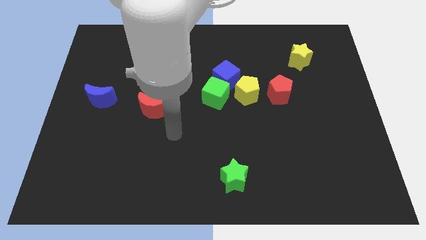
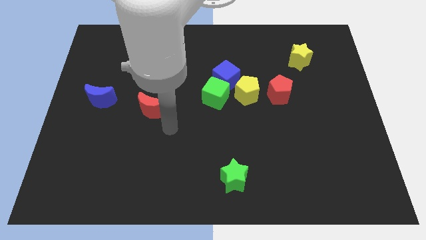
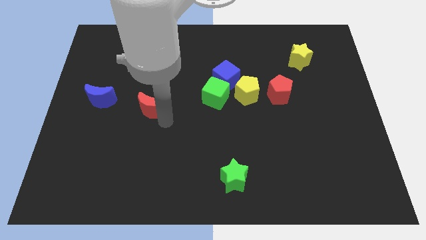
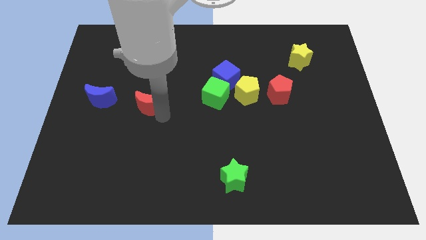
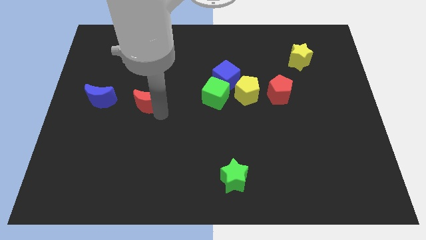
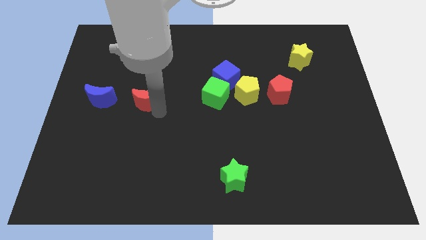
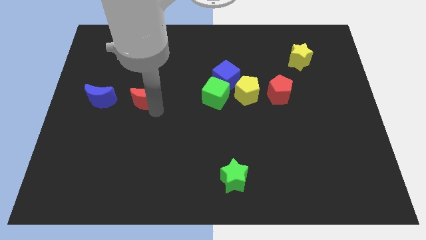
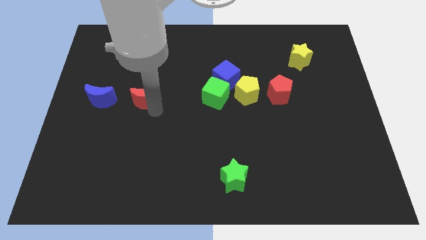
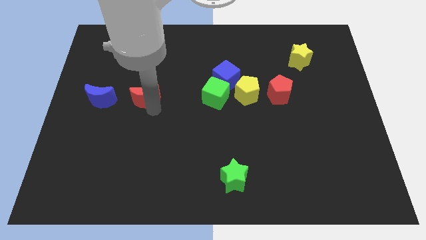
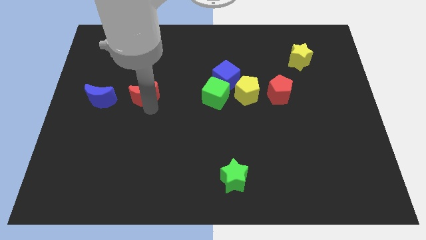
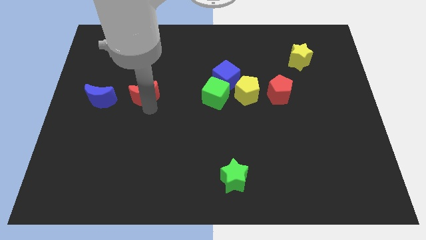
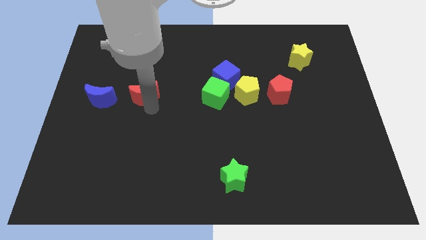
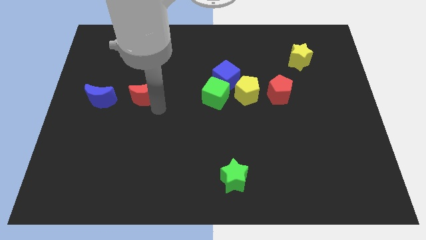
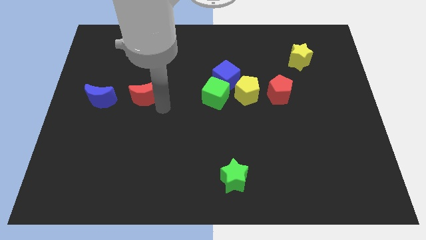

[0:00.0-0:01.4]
place the red moon to the right of the blue moon

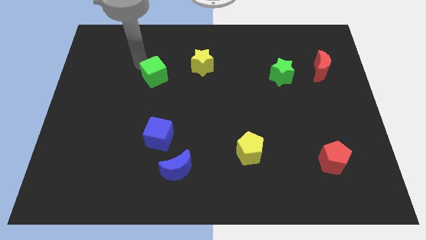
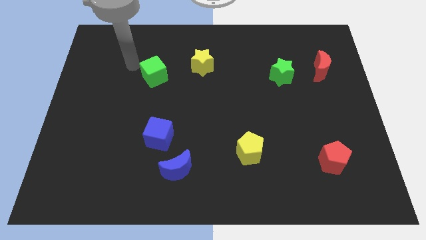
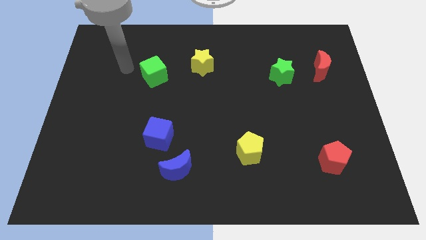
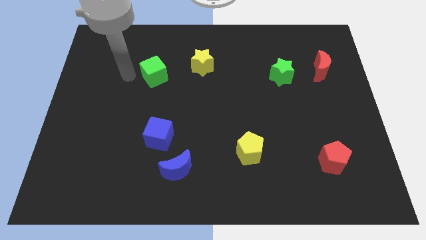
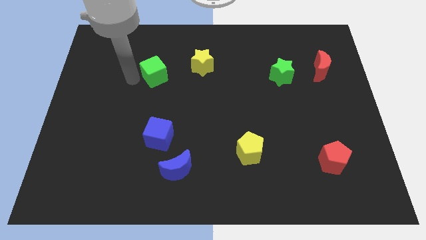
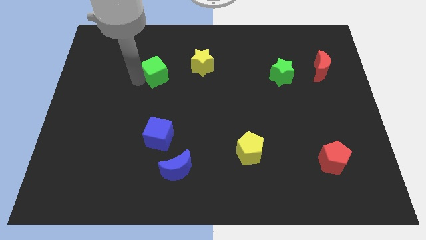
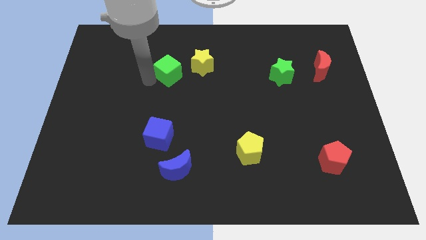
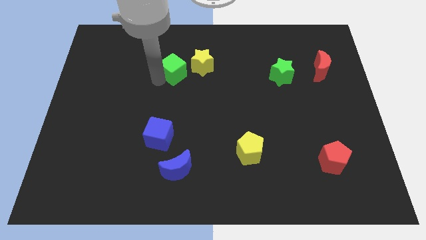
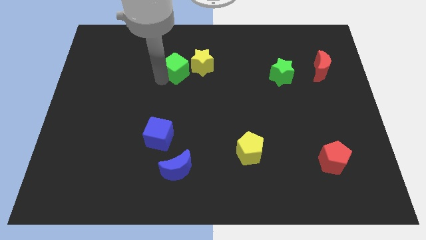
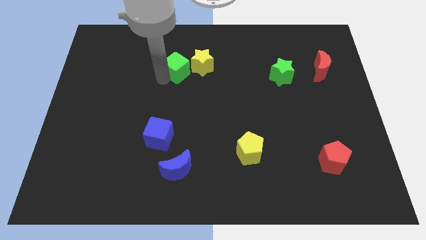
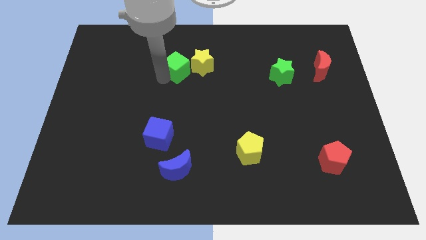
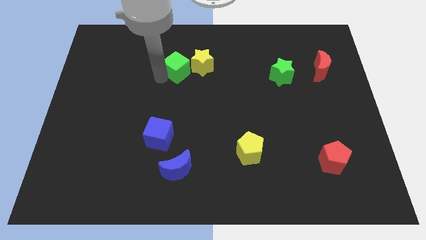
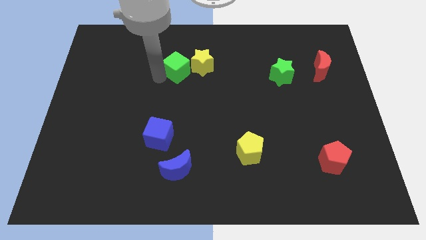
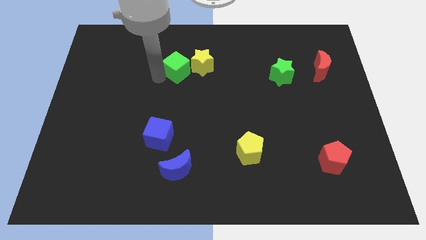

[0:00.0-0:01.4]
move the green cube to the left of the yellow star

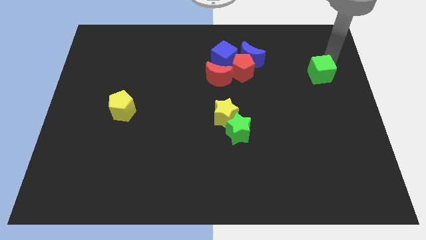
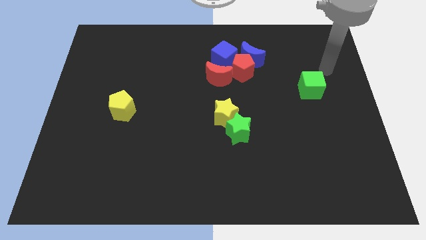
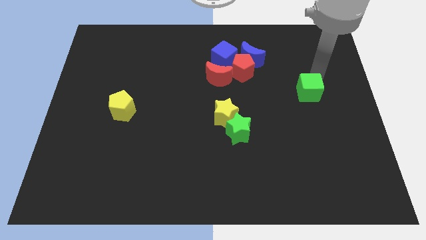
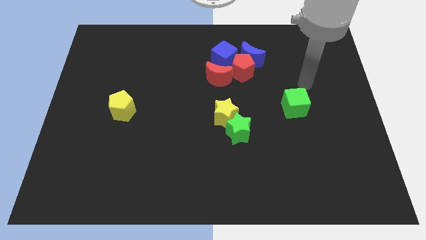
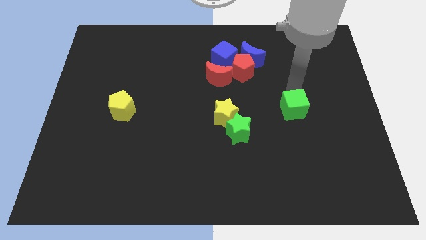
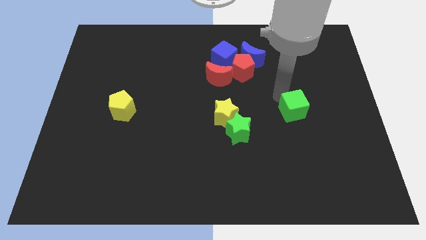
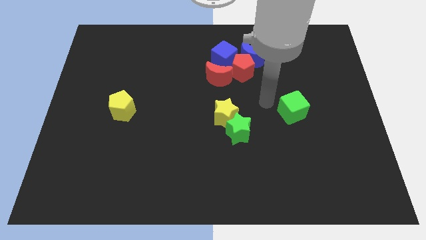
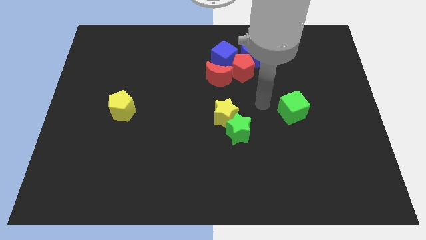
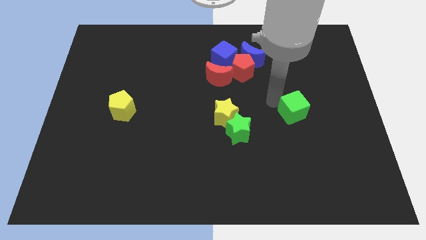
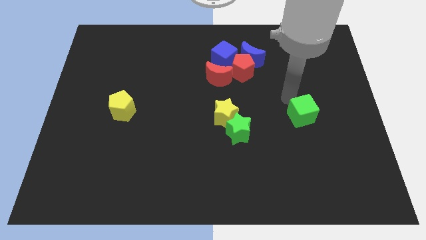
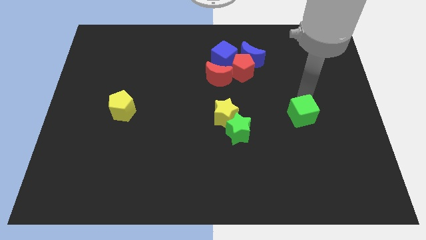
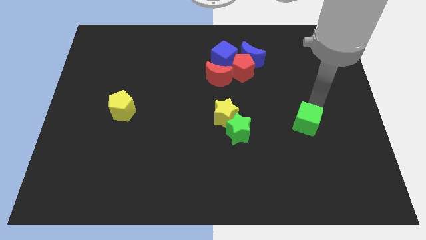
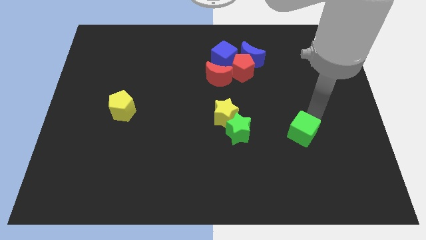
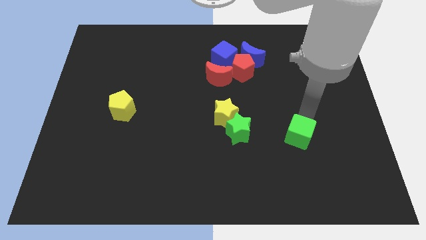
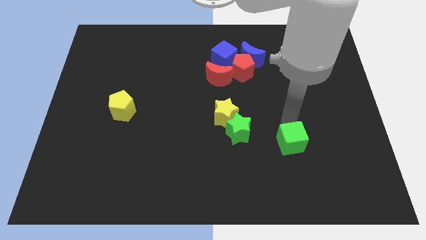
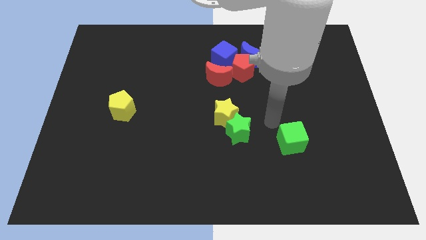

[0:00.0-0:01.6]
place green cube below blue crescent

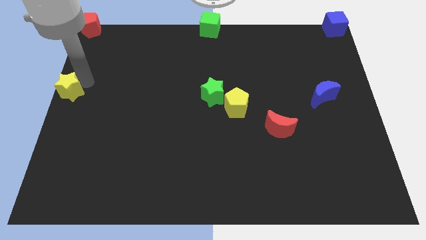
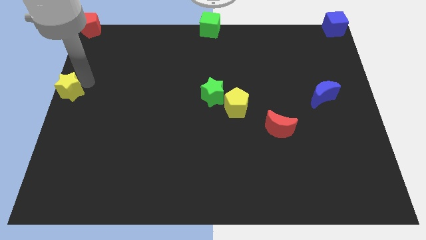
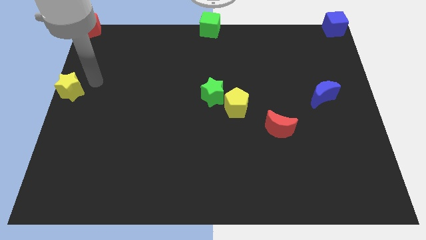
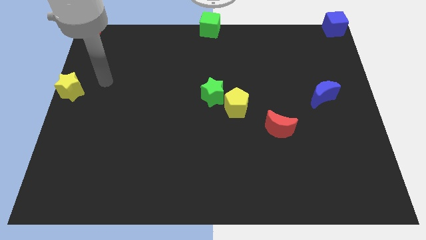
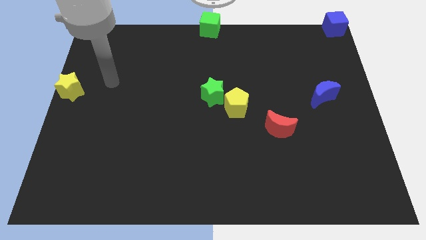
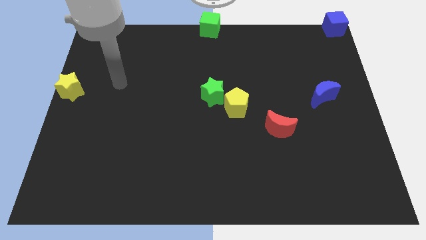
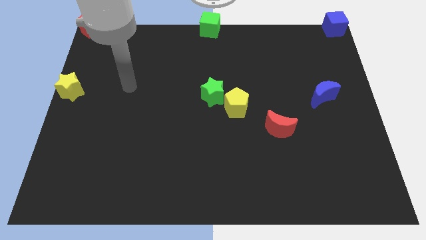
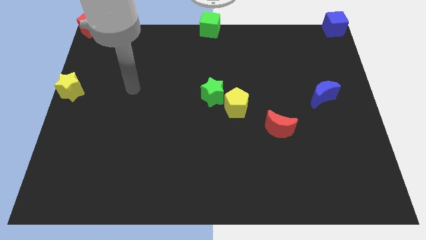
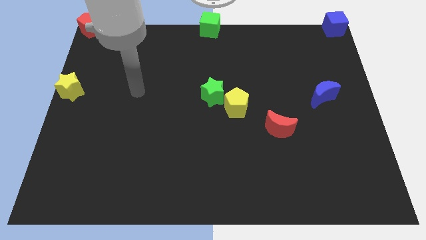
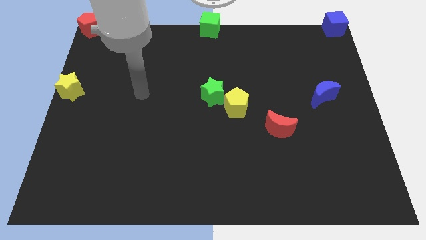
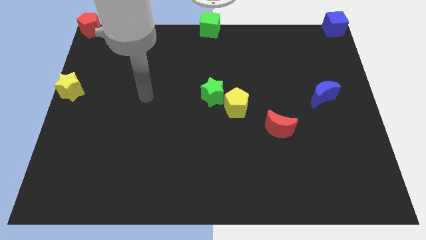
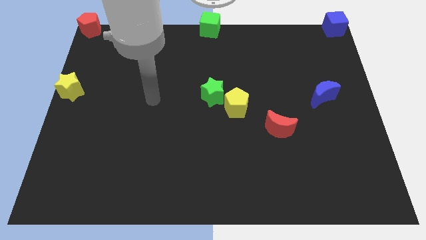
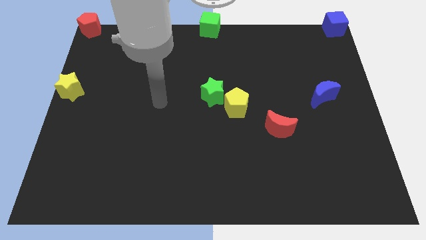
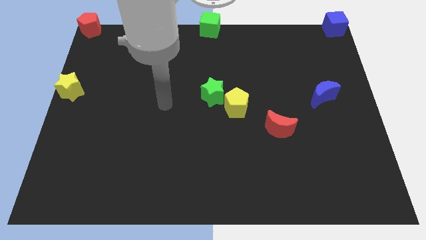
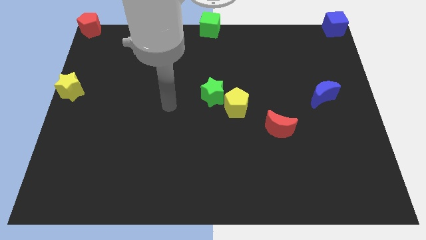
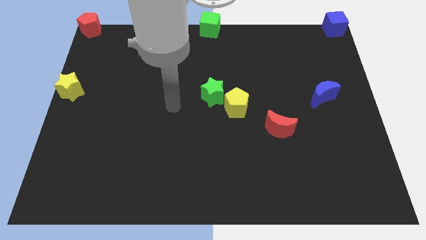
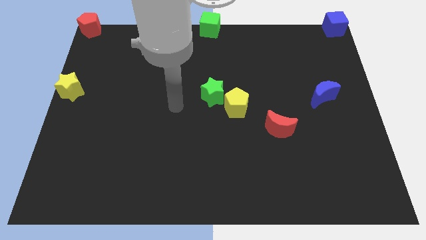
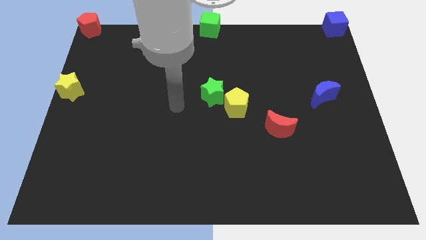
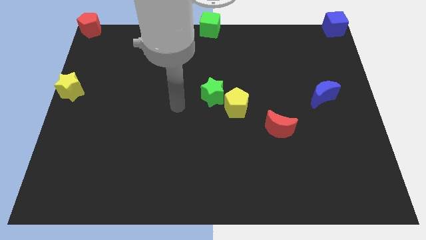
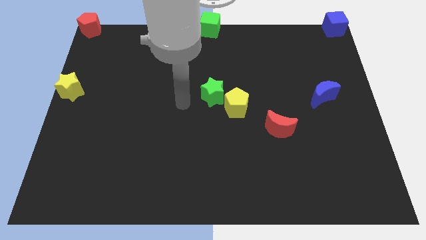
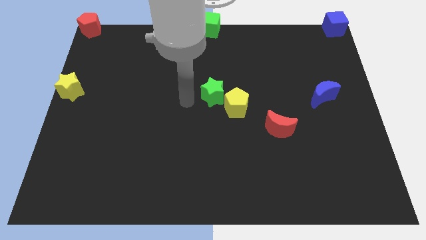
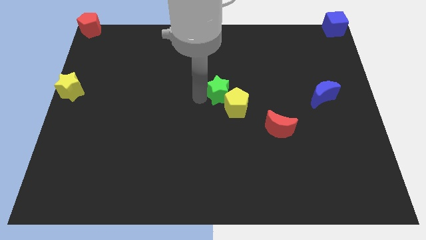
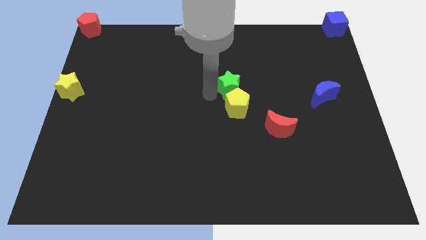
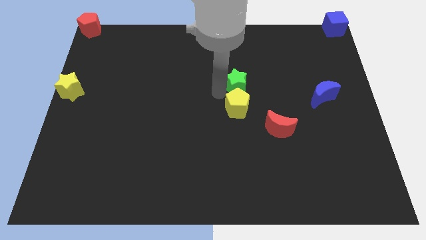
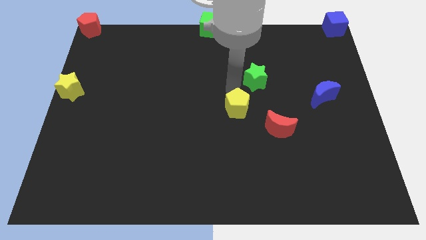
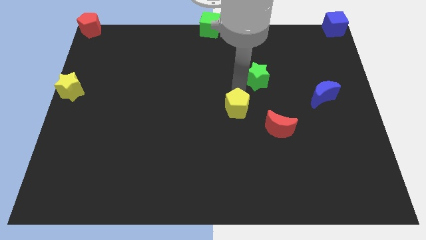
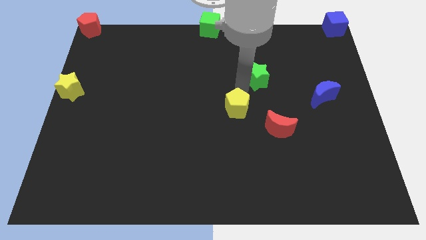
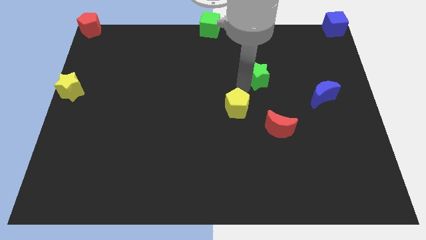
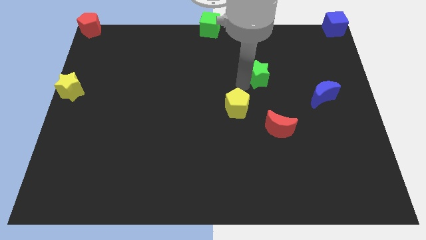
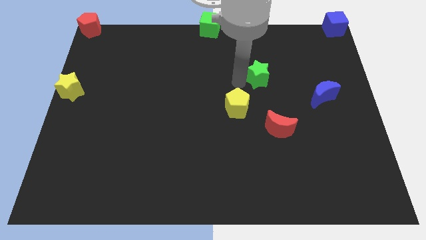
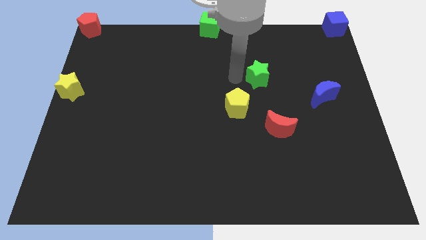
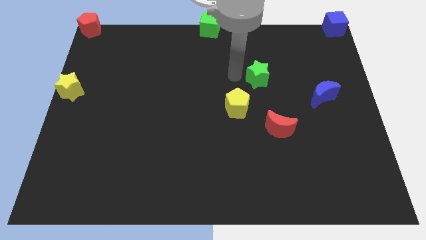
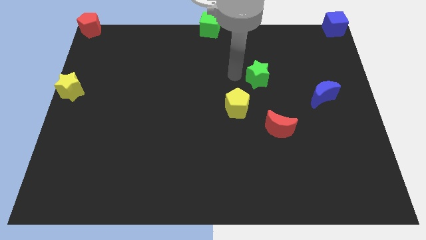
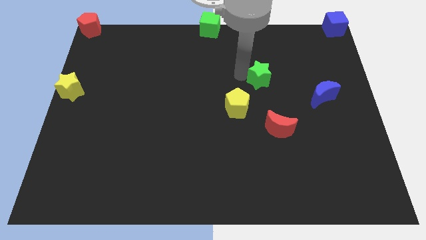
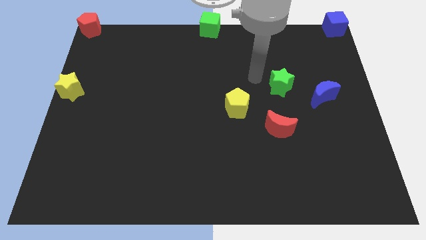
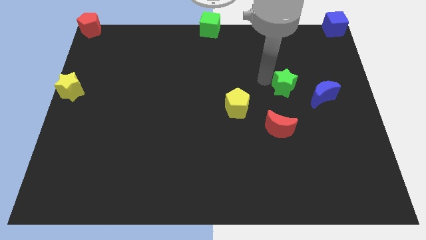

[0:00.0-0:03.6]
place the green star on top od red moon

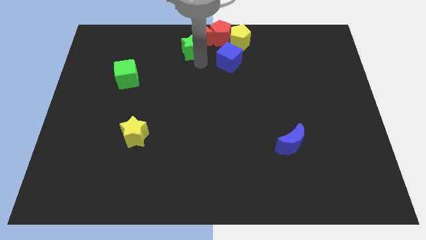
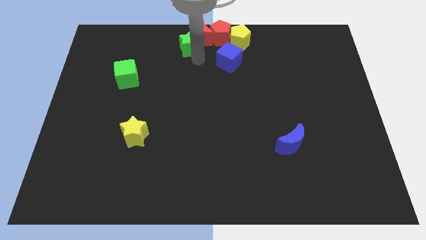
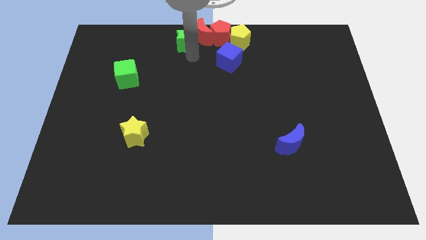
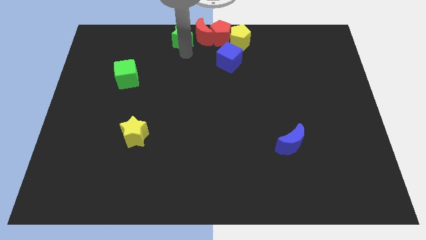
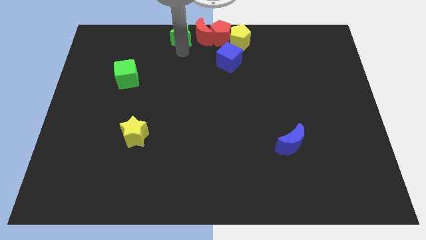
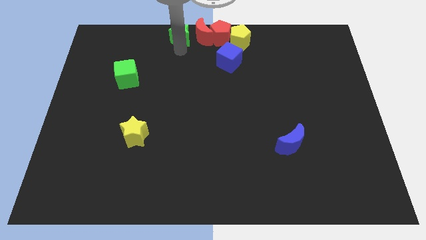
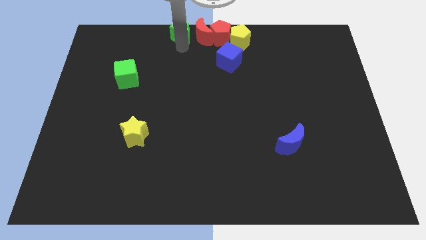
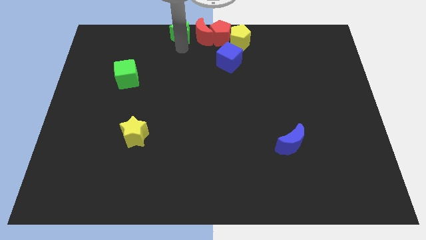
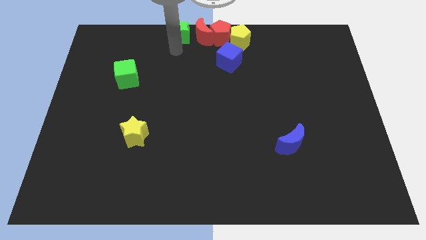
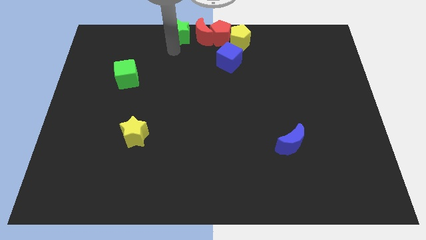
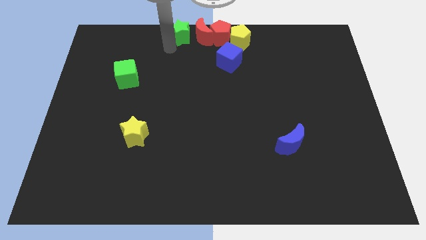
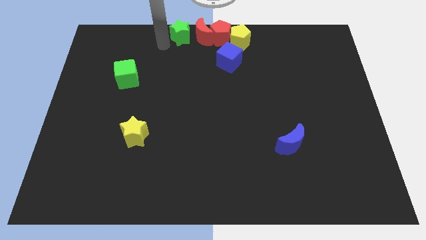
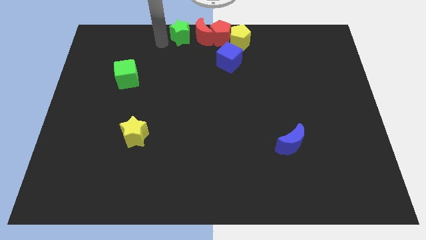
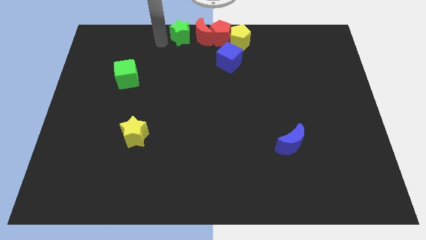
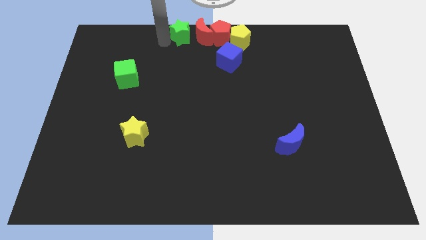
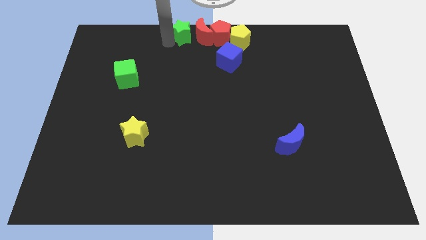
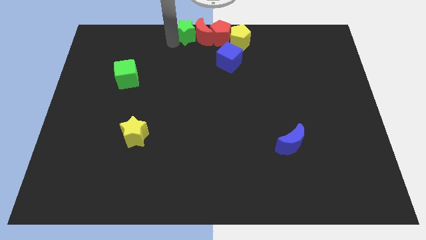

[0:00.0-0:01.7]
place the green star parallel left to the red moon
